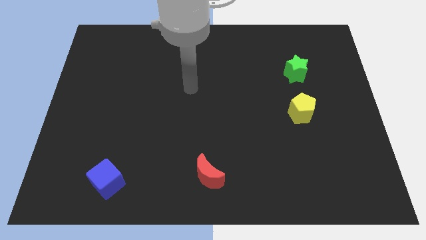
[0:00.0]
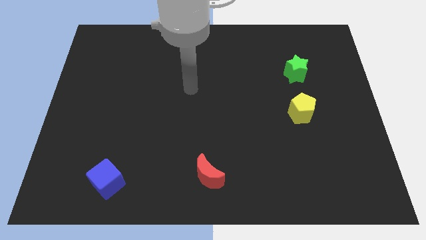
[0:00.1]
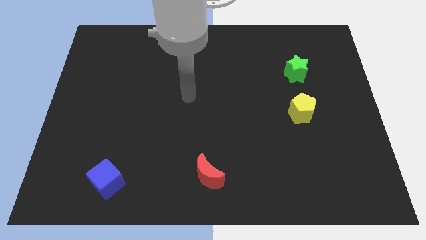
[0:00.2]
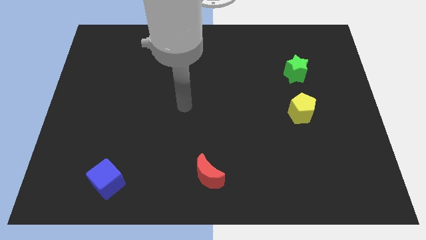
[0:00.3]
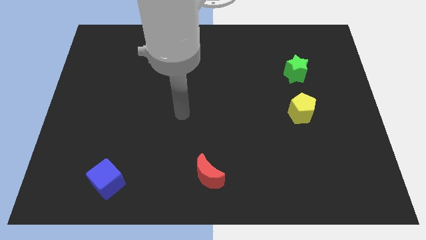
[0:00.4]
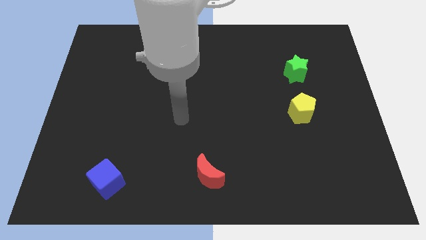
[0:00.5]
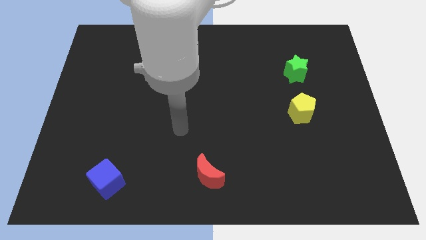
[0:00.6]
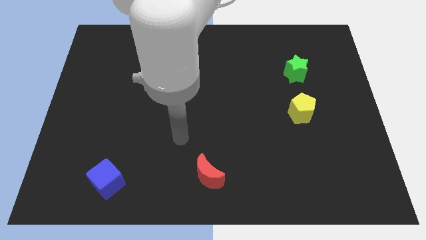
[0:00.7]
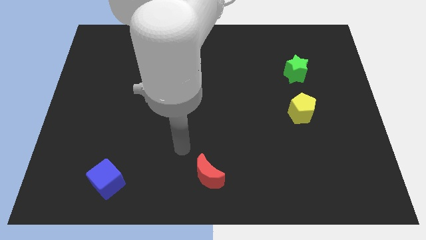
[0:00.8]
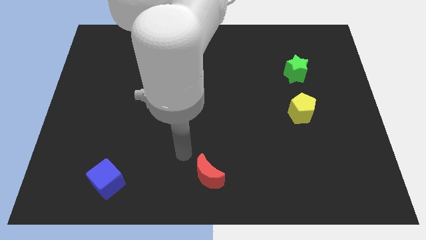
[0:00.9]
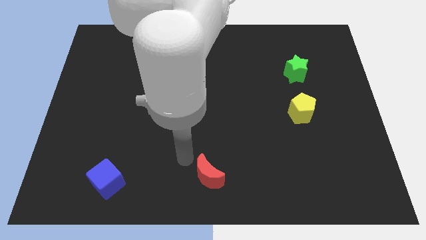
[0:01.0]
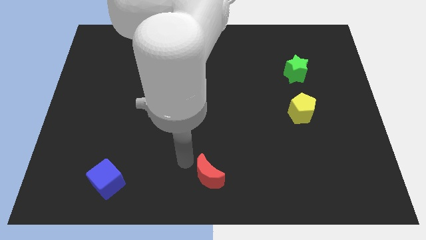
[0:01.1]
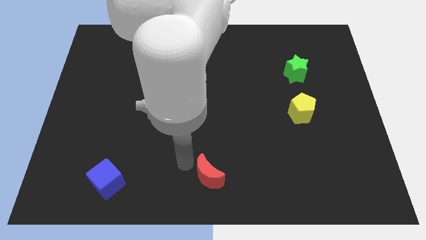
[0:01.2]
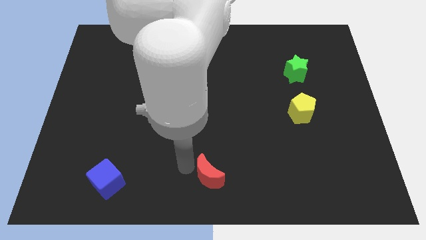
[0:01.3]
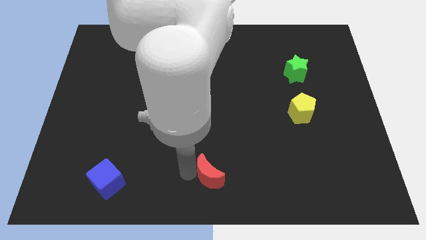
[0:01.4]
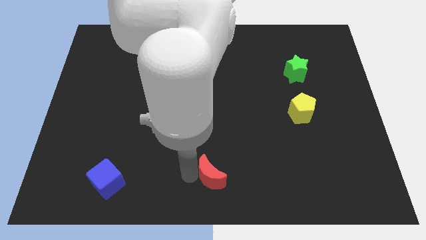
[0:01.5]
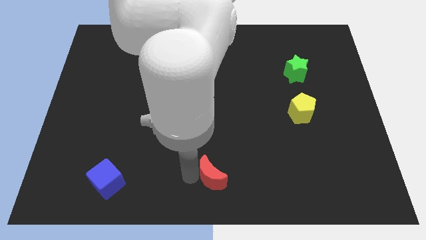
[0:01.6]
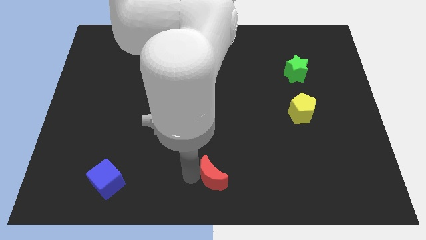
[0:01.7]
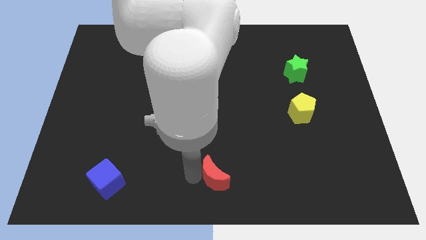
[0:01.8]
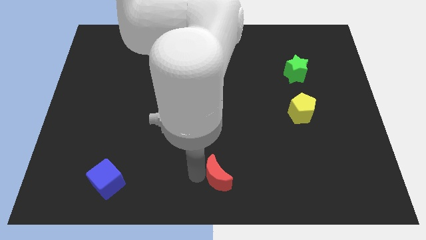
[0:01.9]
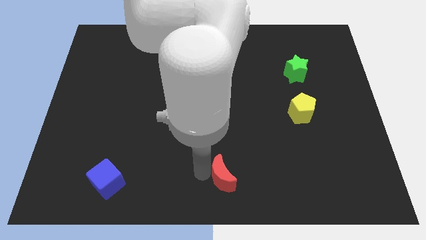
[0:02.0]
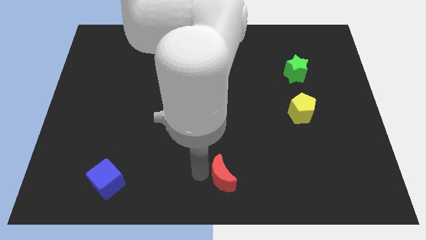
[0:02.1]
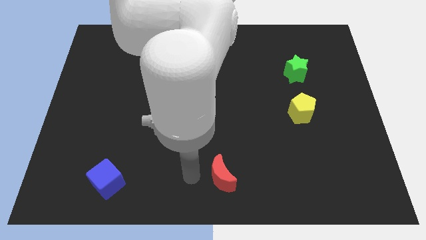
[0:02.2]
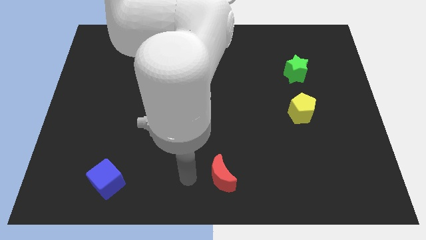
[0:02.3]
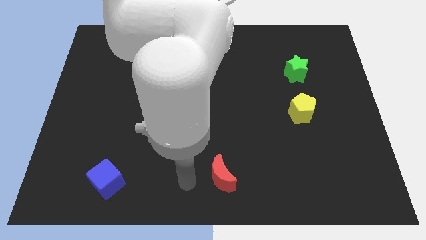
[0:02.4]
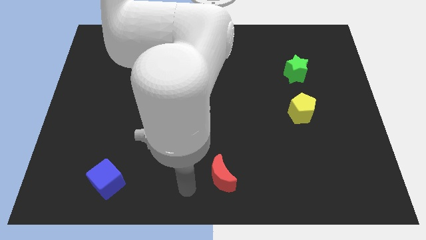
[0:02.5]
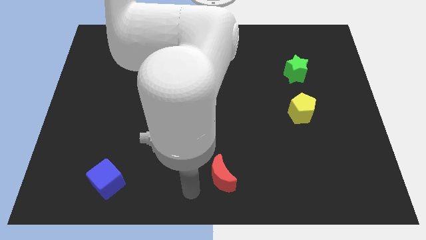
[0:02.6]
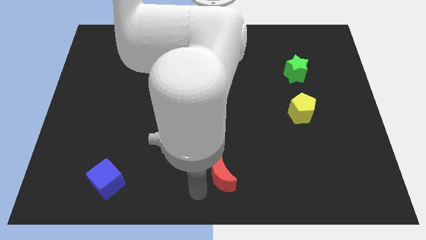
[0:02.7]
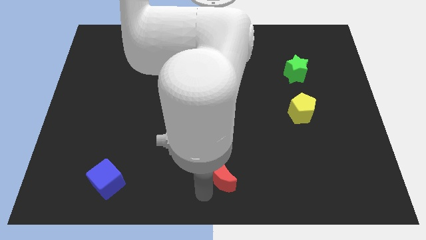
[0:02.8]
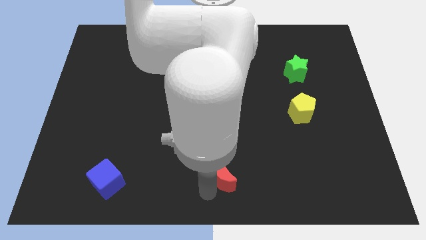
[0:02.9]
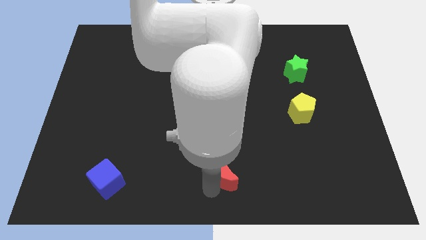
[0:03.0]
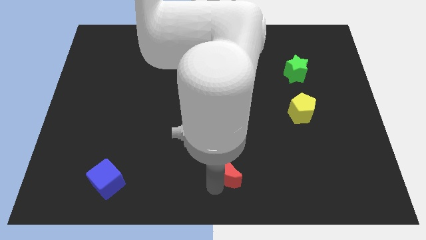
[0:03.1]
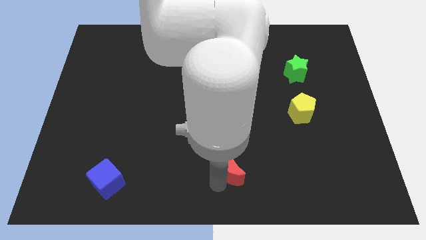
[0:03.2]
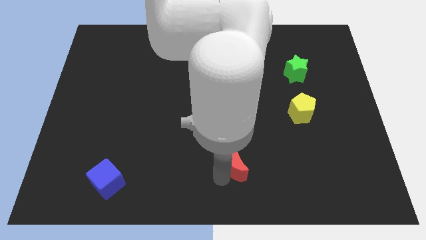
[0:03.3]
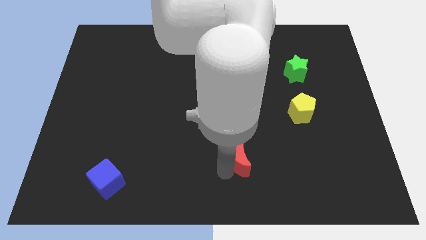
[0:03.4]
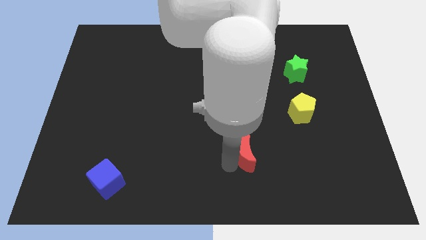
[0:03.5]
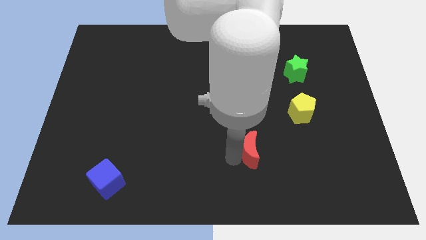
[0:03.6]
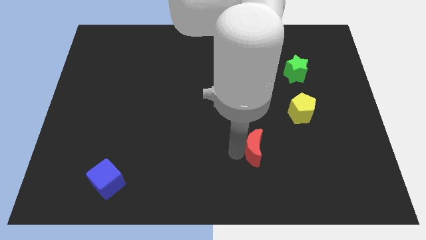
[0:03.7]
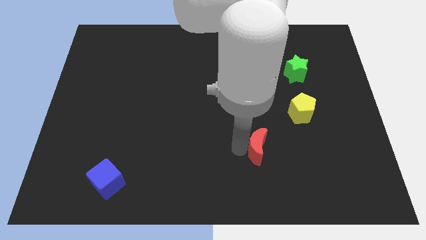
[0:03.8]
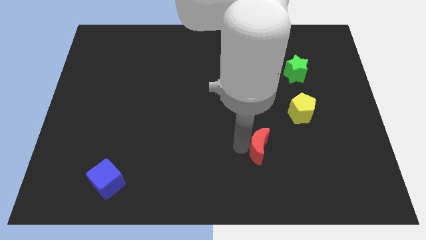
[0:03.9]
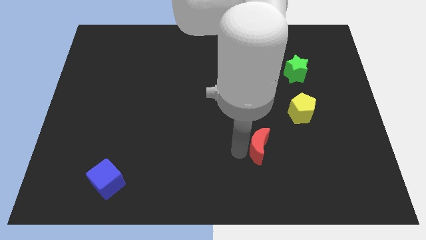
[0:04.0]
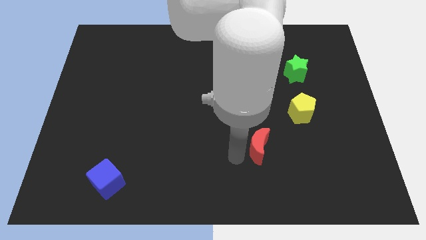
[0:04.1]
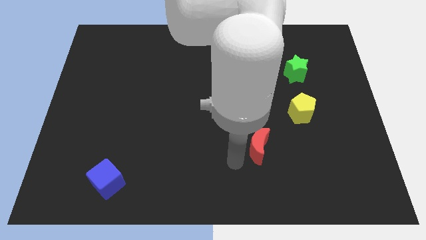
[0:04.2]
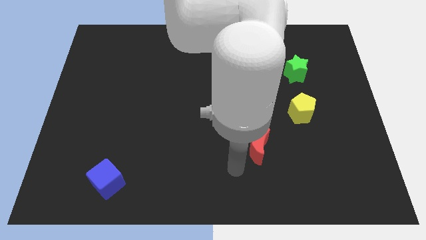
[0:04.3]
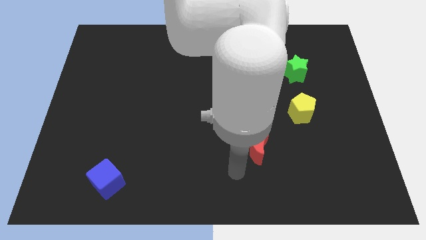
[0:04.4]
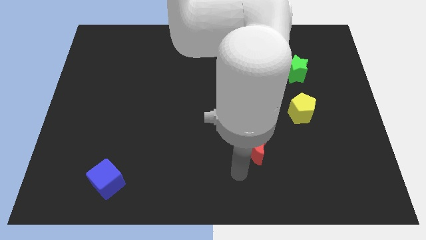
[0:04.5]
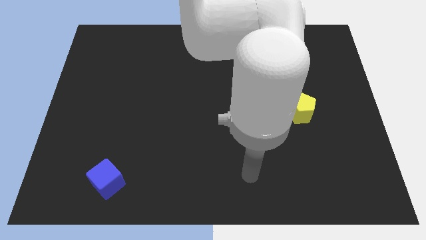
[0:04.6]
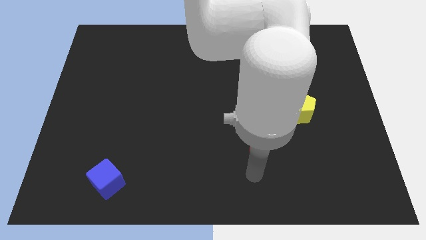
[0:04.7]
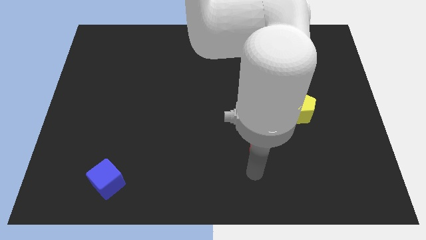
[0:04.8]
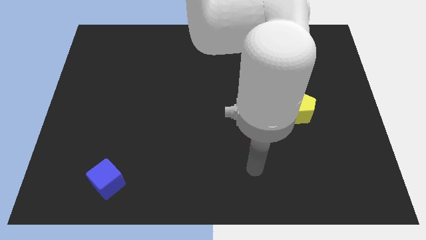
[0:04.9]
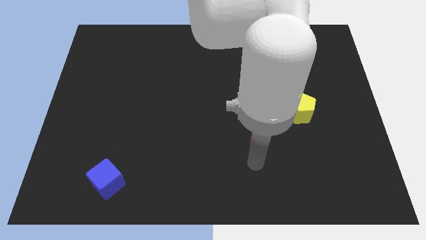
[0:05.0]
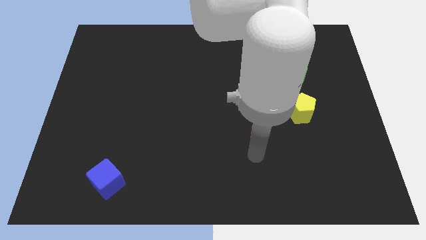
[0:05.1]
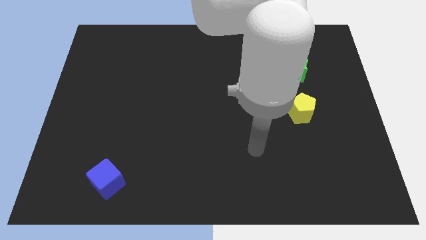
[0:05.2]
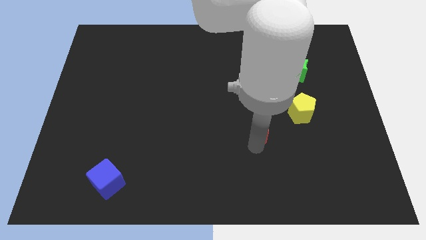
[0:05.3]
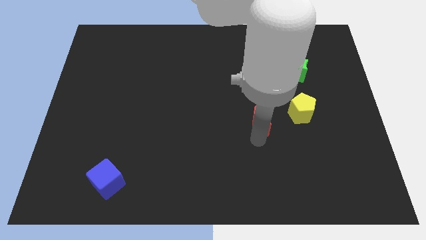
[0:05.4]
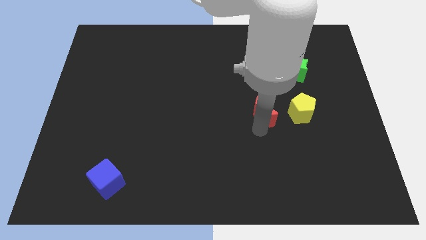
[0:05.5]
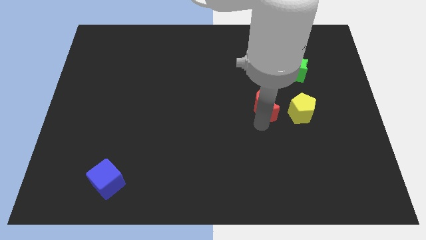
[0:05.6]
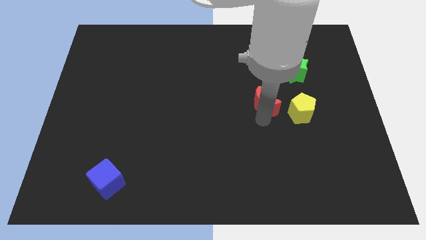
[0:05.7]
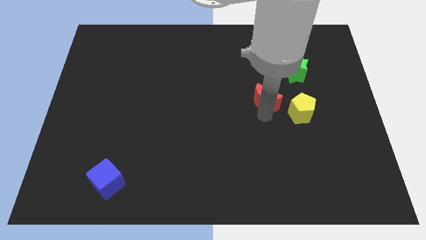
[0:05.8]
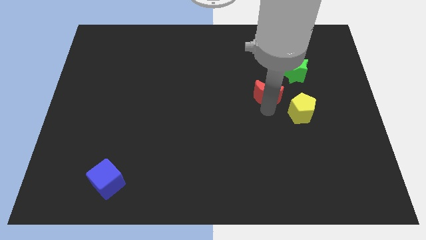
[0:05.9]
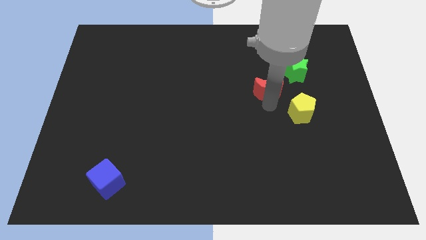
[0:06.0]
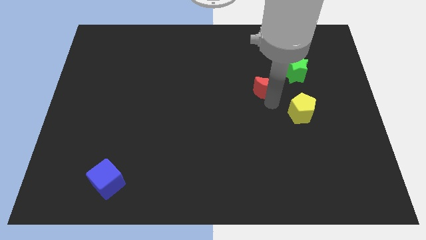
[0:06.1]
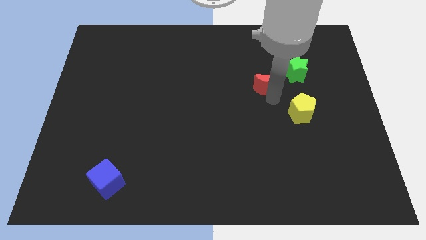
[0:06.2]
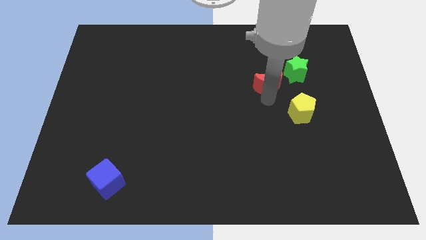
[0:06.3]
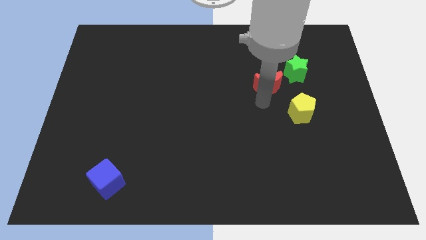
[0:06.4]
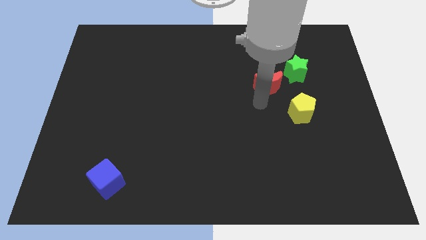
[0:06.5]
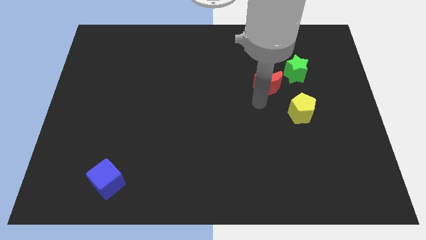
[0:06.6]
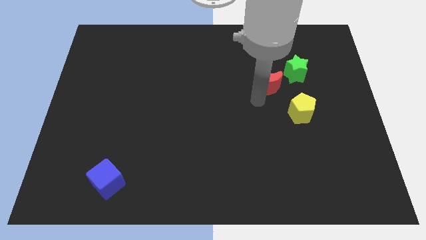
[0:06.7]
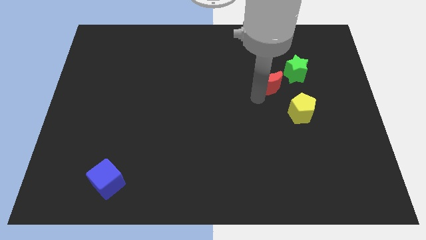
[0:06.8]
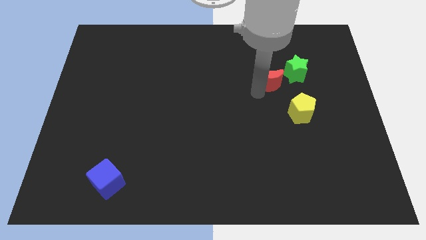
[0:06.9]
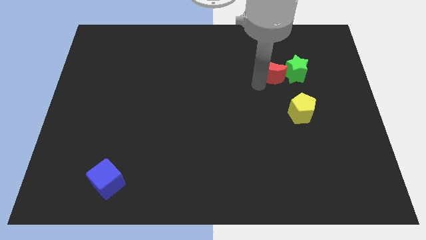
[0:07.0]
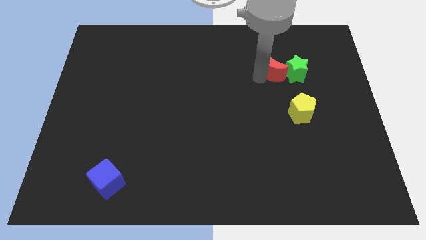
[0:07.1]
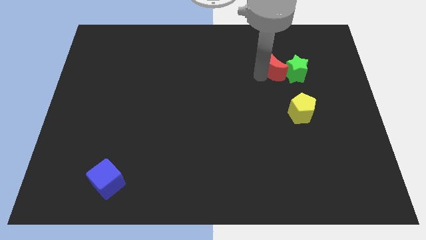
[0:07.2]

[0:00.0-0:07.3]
move the red block next to the green star

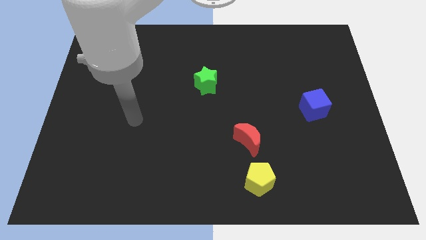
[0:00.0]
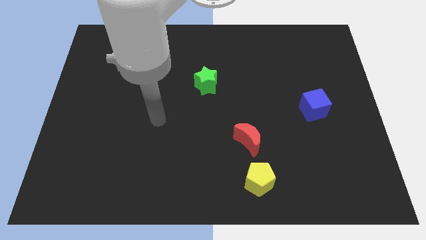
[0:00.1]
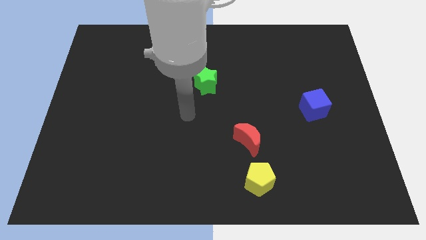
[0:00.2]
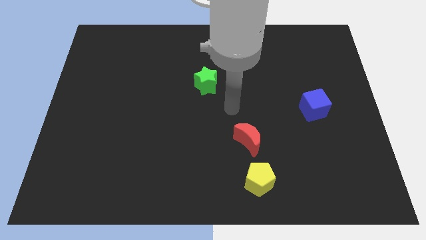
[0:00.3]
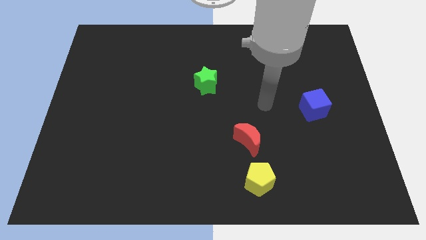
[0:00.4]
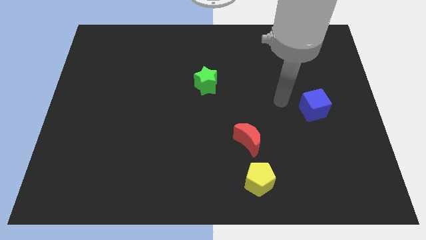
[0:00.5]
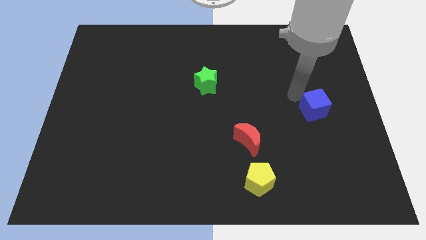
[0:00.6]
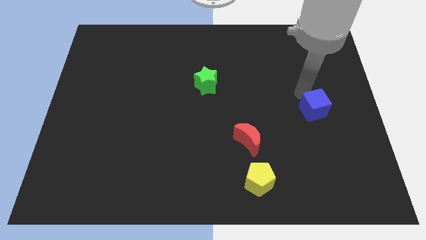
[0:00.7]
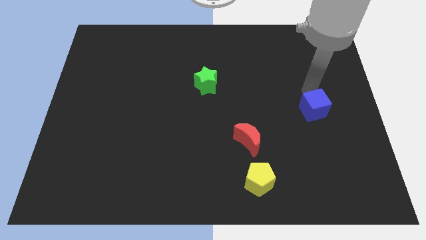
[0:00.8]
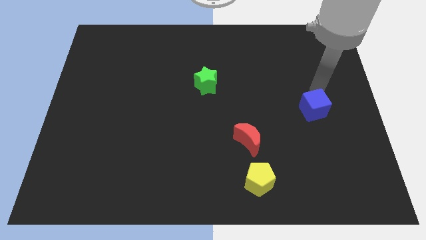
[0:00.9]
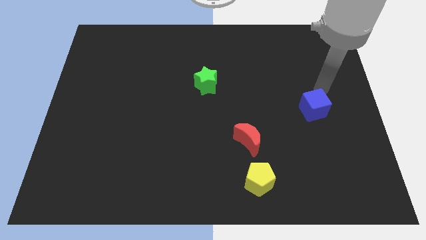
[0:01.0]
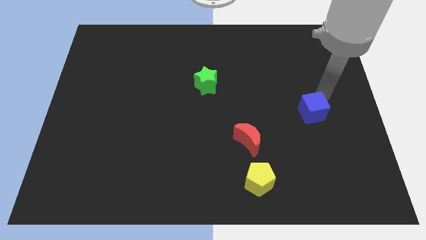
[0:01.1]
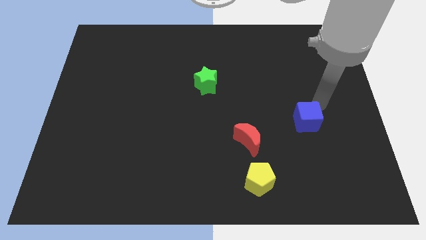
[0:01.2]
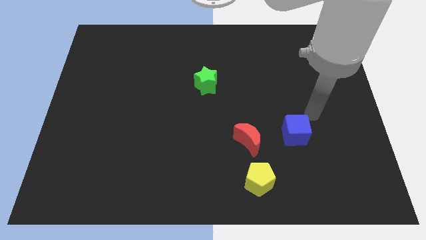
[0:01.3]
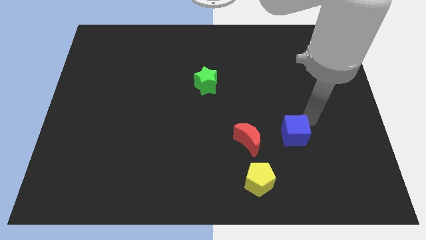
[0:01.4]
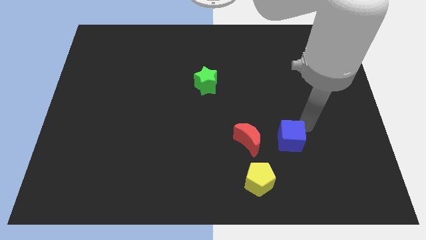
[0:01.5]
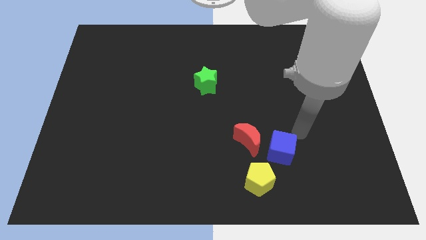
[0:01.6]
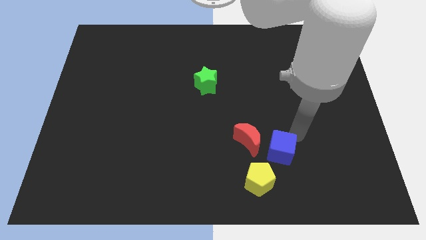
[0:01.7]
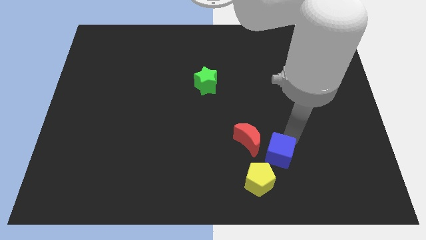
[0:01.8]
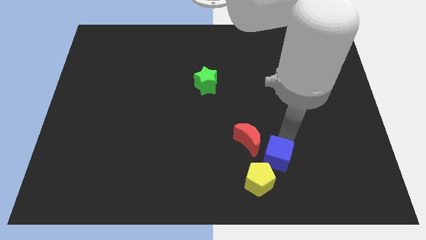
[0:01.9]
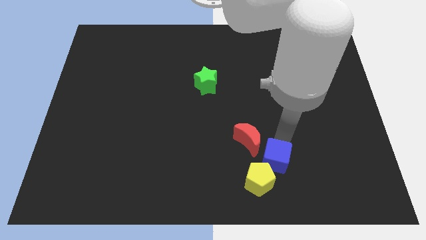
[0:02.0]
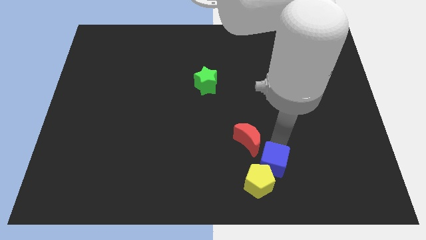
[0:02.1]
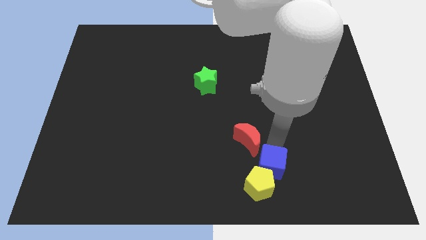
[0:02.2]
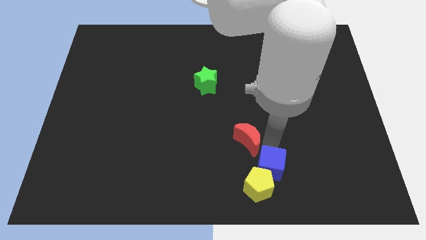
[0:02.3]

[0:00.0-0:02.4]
push the cube towards the pentagon
